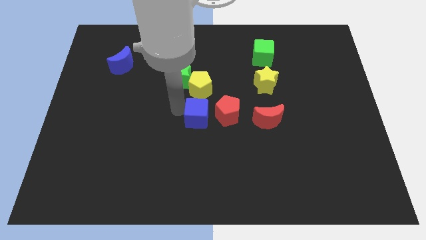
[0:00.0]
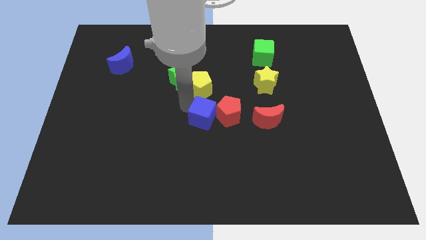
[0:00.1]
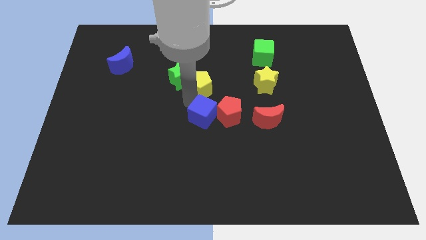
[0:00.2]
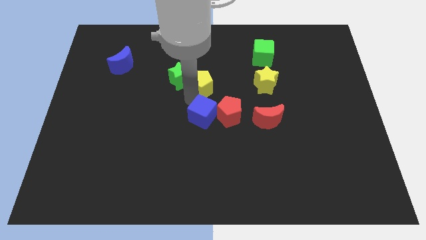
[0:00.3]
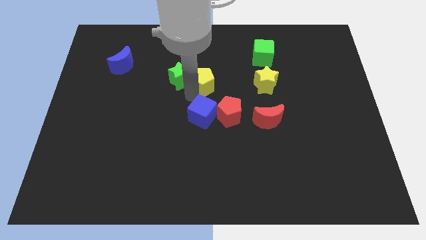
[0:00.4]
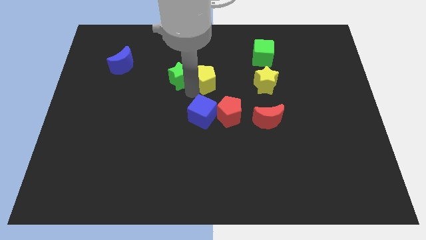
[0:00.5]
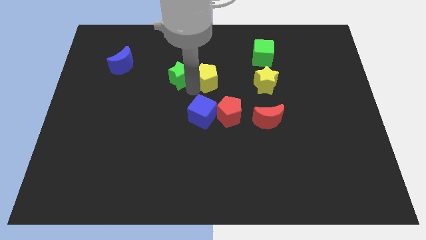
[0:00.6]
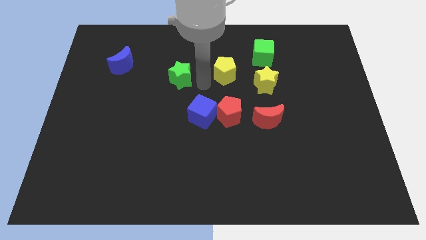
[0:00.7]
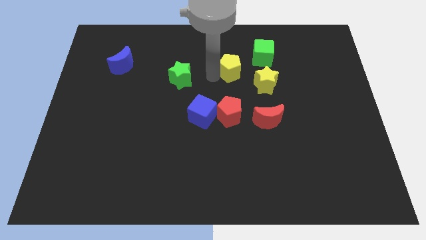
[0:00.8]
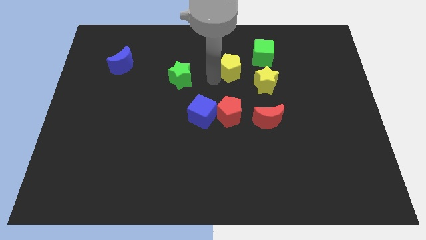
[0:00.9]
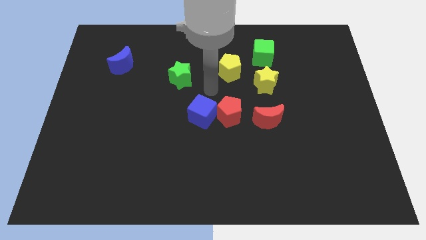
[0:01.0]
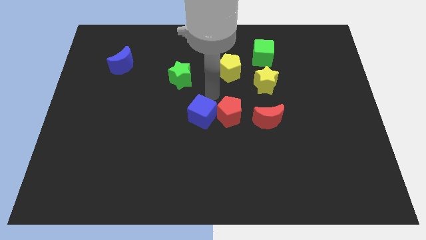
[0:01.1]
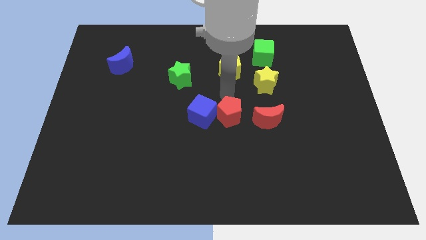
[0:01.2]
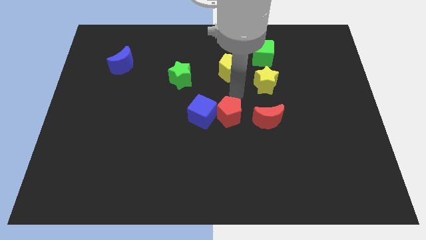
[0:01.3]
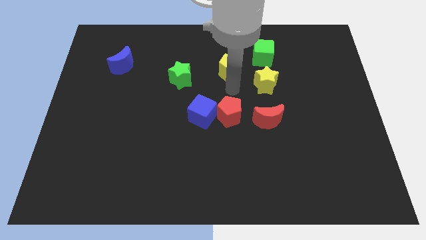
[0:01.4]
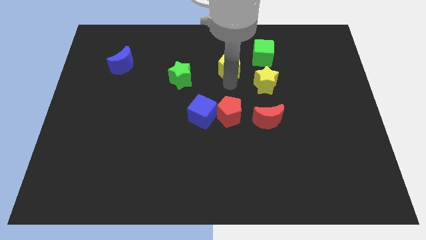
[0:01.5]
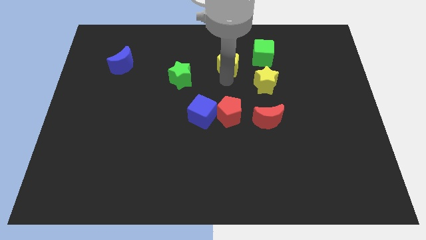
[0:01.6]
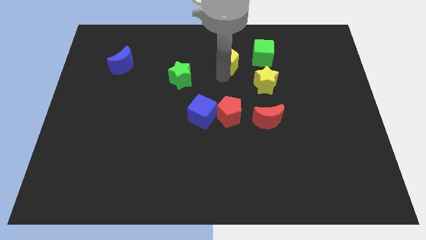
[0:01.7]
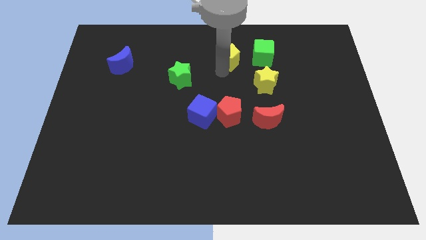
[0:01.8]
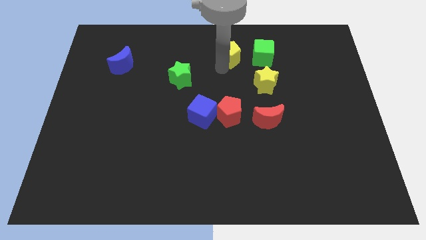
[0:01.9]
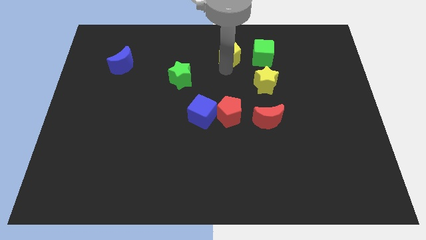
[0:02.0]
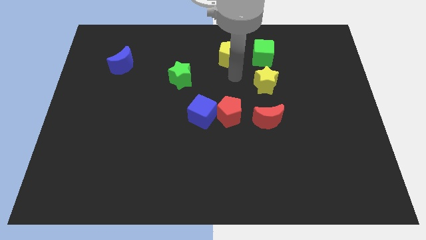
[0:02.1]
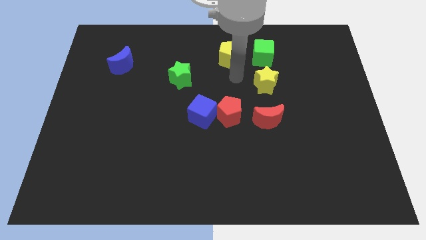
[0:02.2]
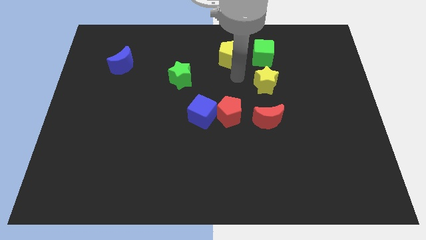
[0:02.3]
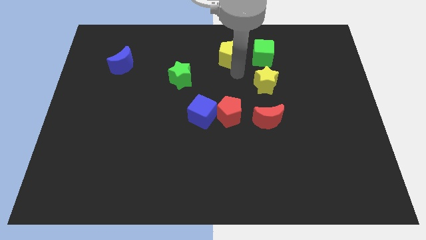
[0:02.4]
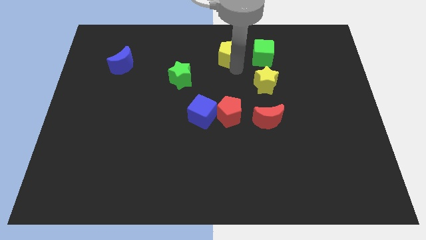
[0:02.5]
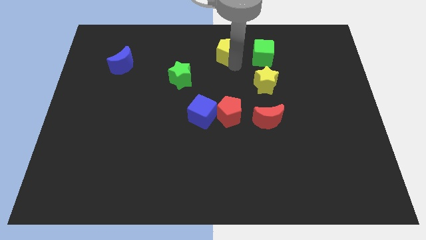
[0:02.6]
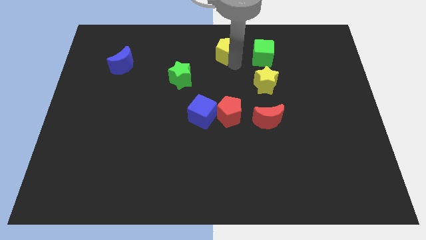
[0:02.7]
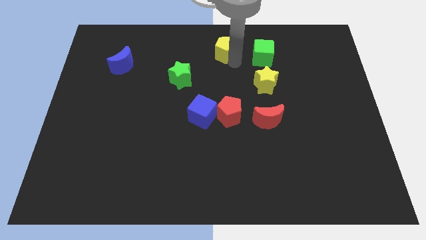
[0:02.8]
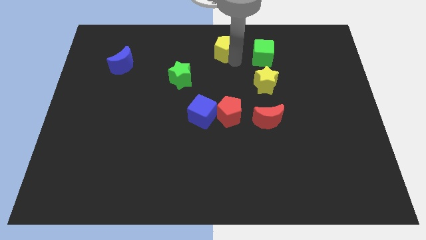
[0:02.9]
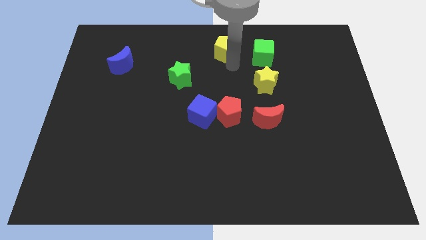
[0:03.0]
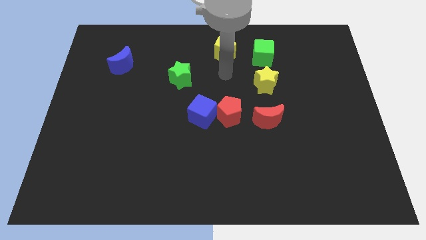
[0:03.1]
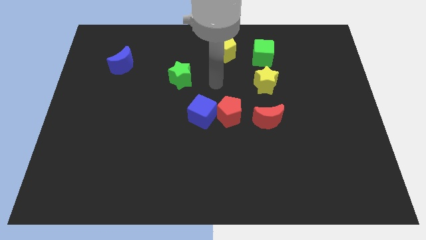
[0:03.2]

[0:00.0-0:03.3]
move the yellow pentagon to the left of the green cube

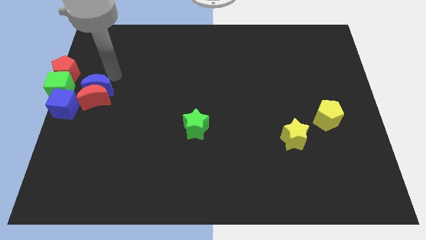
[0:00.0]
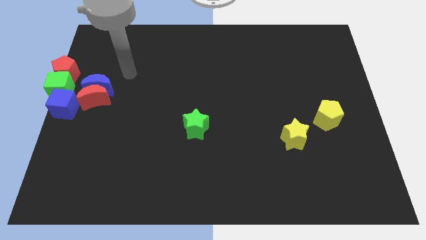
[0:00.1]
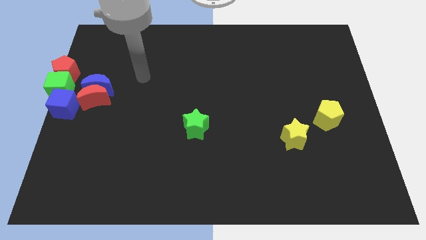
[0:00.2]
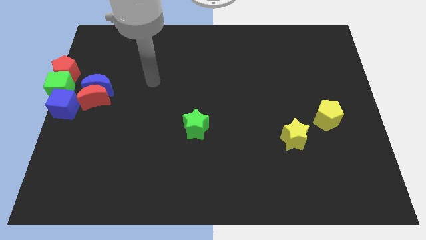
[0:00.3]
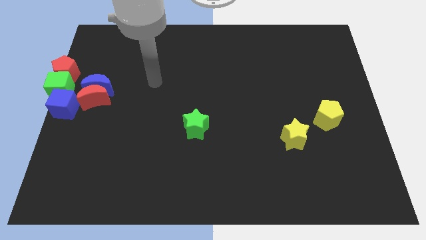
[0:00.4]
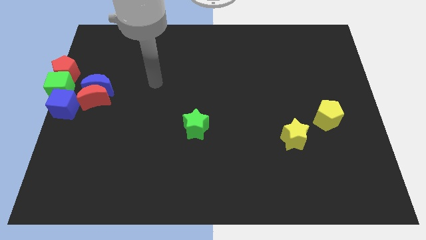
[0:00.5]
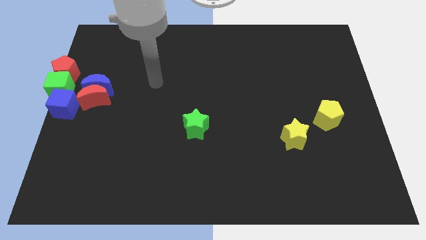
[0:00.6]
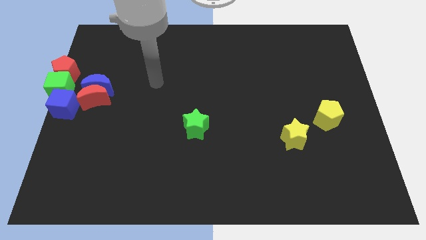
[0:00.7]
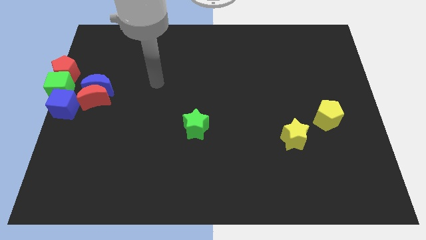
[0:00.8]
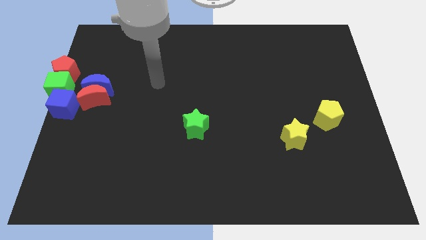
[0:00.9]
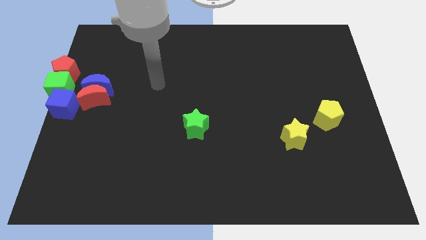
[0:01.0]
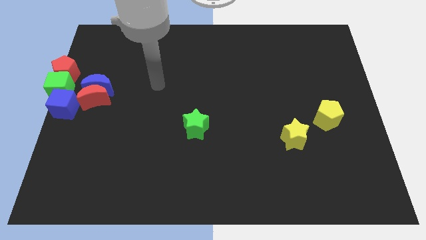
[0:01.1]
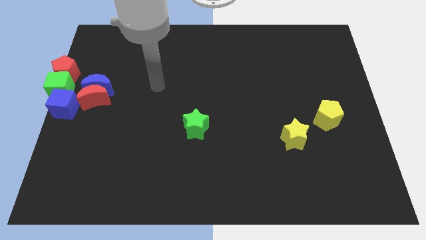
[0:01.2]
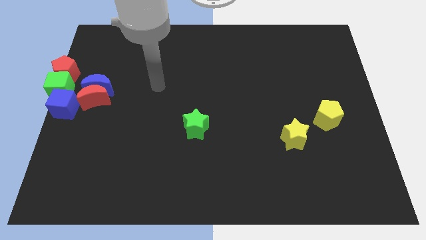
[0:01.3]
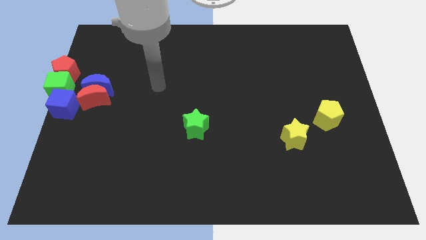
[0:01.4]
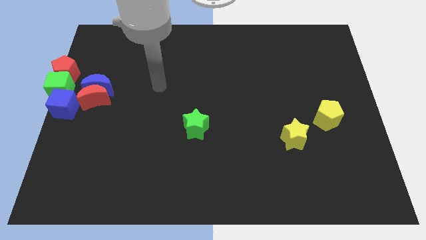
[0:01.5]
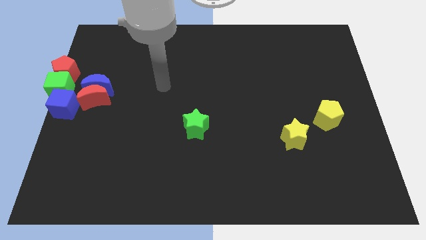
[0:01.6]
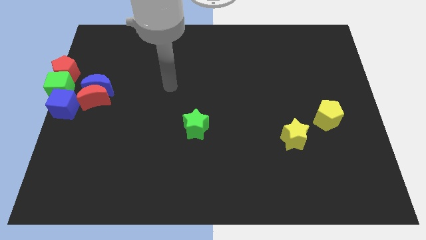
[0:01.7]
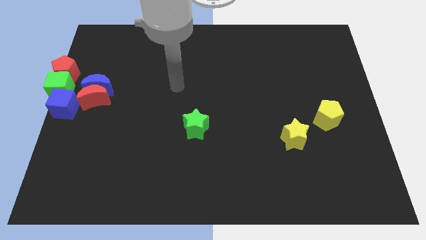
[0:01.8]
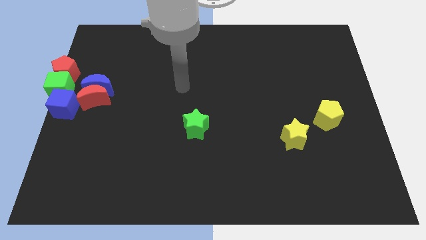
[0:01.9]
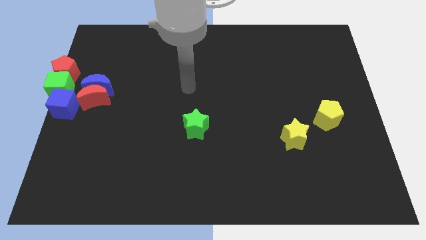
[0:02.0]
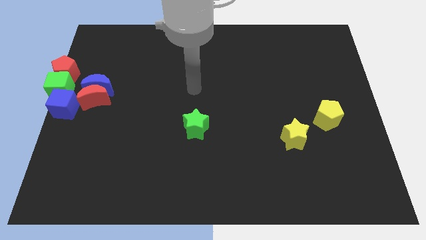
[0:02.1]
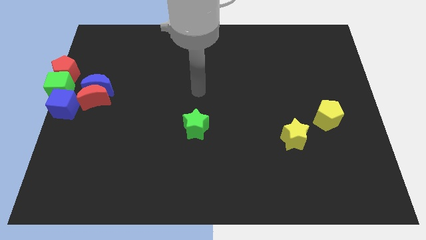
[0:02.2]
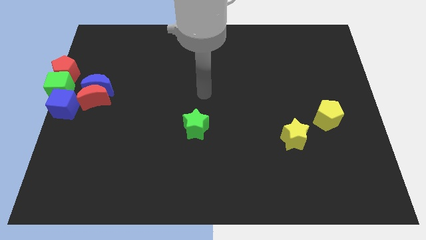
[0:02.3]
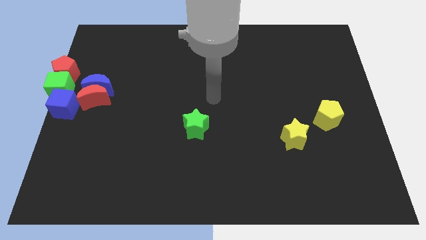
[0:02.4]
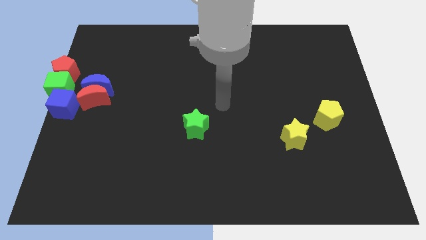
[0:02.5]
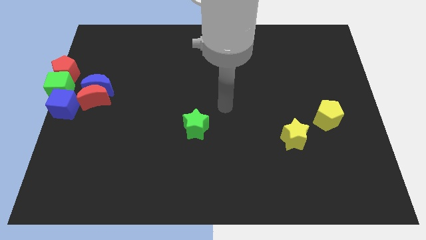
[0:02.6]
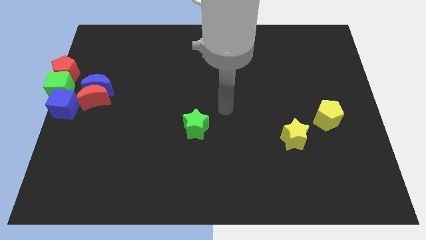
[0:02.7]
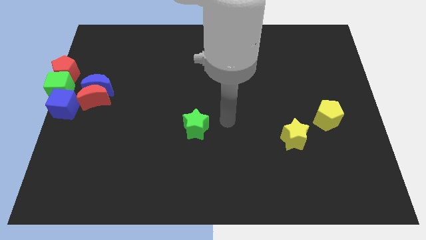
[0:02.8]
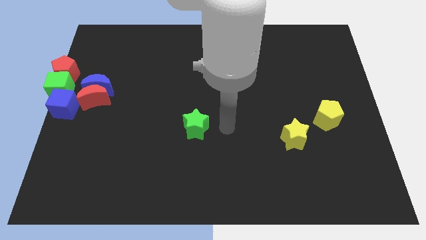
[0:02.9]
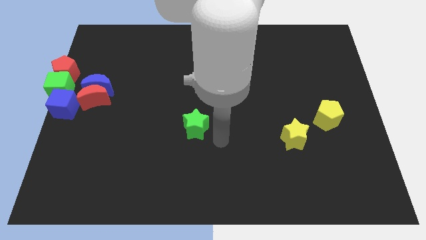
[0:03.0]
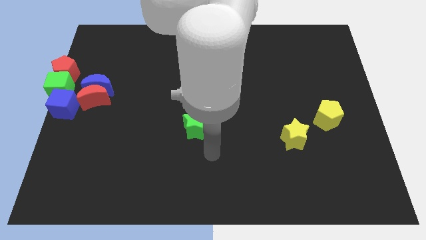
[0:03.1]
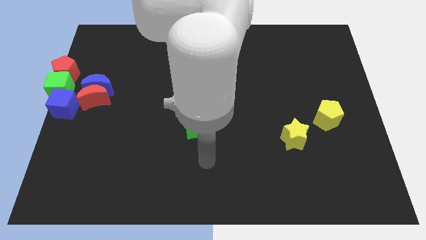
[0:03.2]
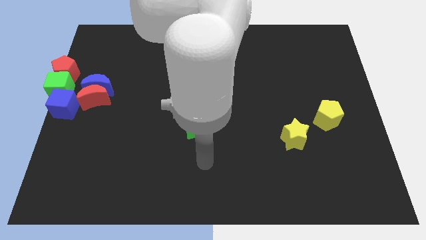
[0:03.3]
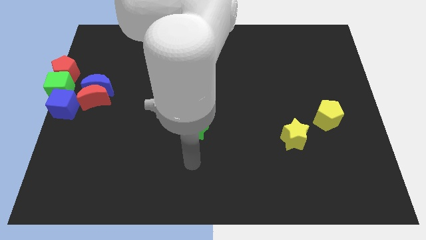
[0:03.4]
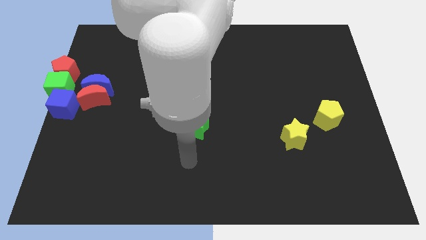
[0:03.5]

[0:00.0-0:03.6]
place your arm below the green star

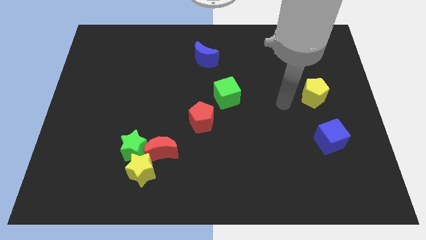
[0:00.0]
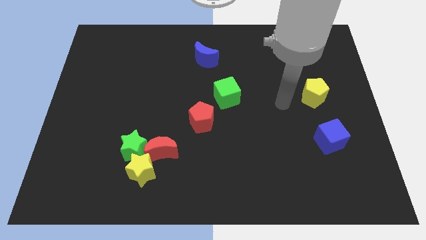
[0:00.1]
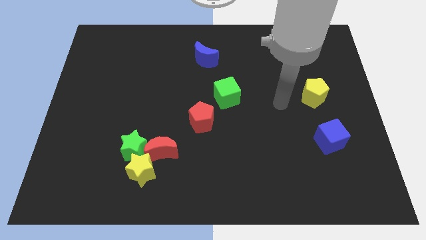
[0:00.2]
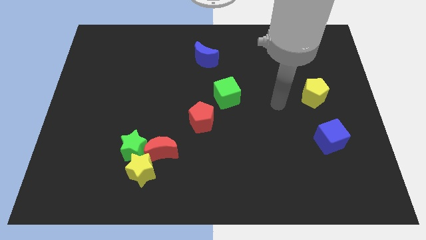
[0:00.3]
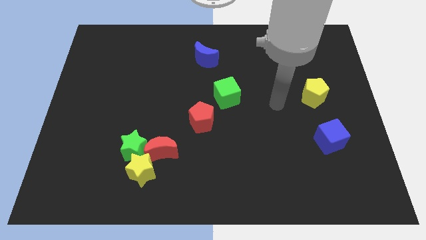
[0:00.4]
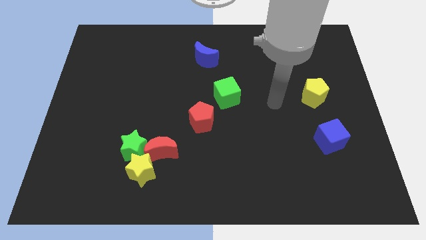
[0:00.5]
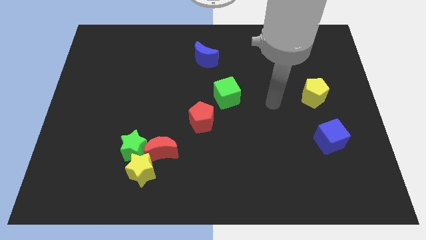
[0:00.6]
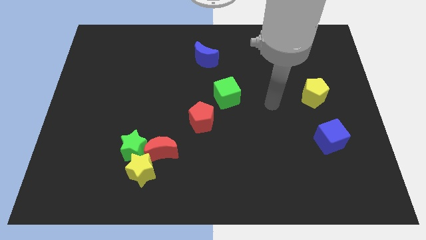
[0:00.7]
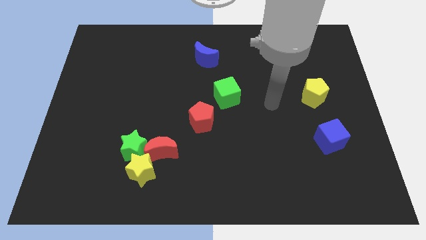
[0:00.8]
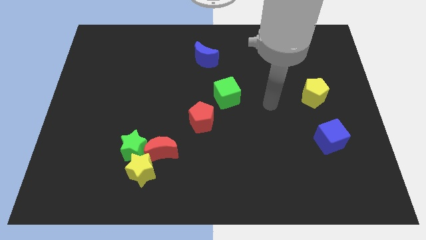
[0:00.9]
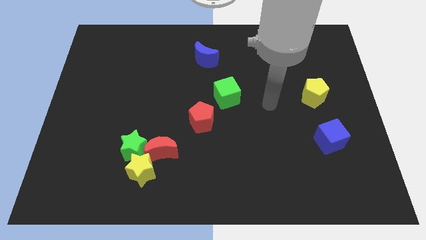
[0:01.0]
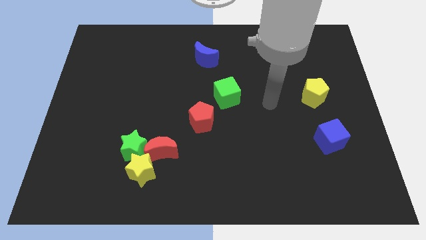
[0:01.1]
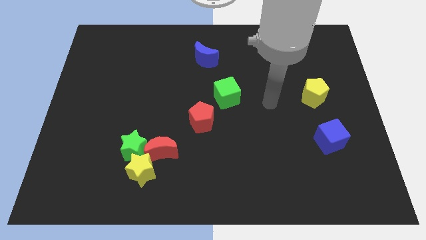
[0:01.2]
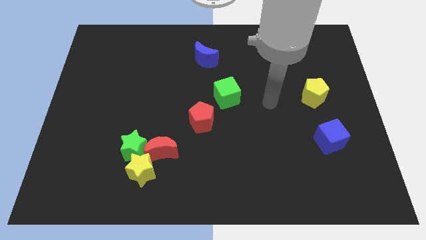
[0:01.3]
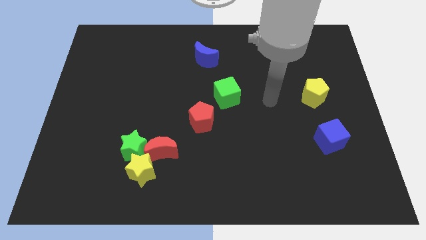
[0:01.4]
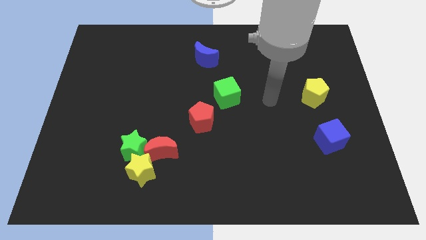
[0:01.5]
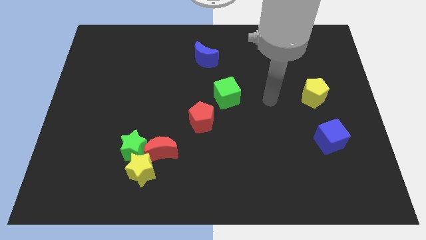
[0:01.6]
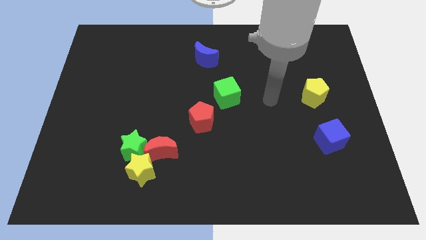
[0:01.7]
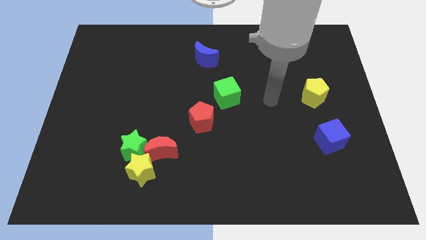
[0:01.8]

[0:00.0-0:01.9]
point your arm to the right of green cube

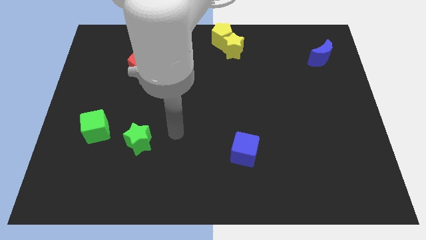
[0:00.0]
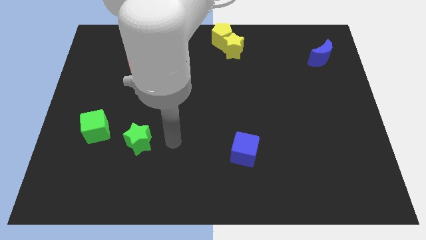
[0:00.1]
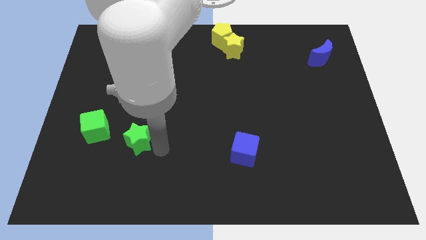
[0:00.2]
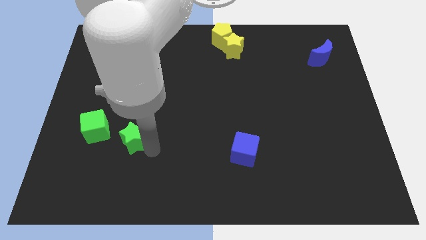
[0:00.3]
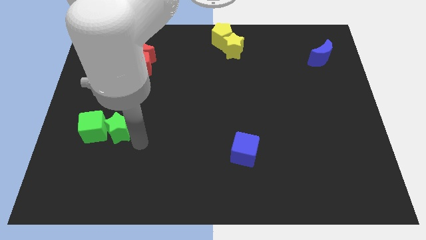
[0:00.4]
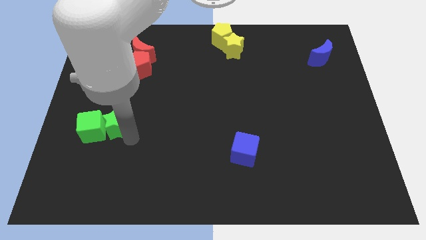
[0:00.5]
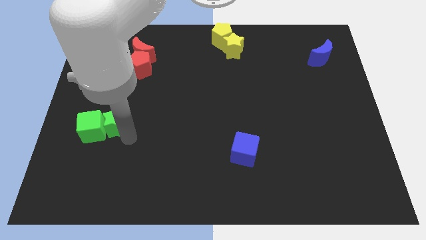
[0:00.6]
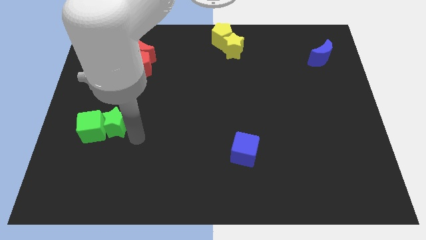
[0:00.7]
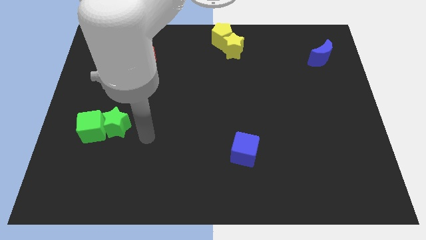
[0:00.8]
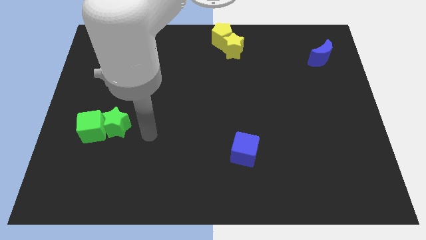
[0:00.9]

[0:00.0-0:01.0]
push green star into green cube
